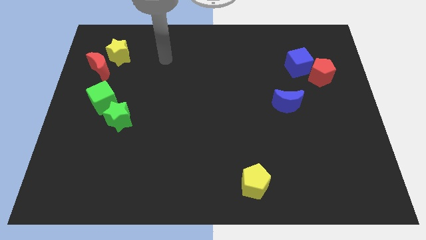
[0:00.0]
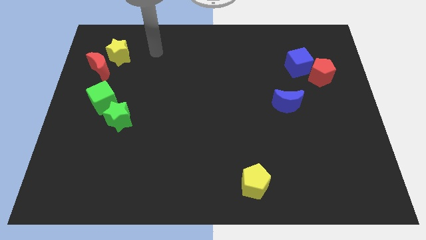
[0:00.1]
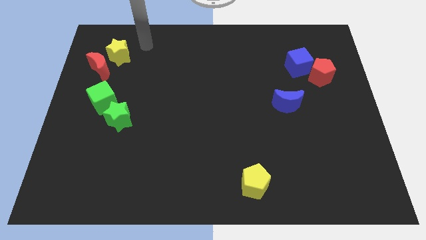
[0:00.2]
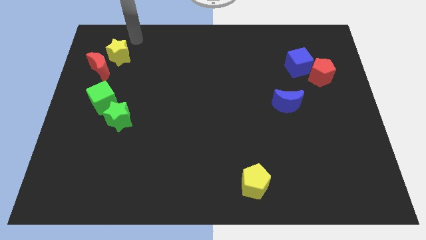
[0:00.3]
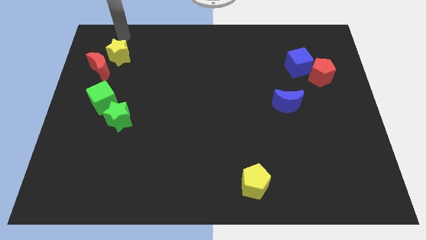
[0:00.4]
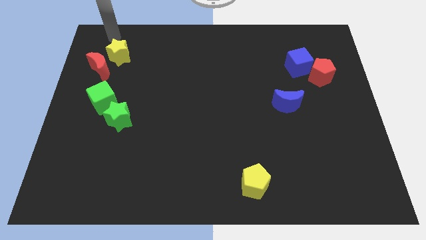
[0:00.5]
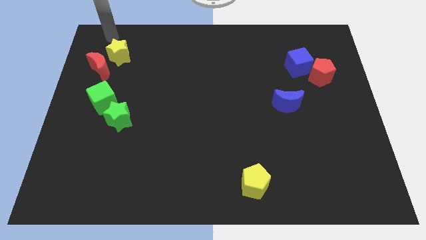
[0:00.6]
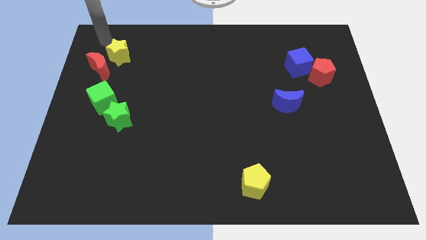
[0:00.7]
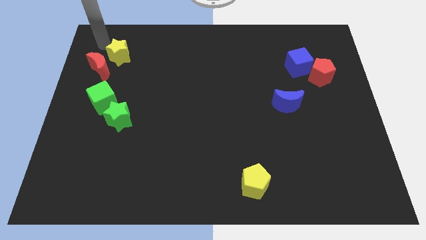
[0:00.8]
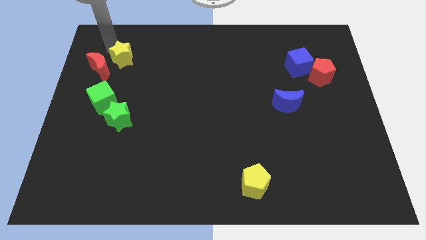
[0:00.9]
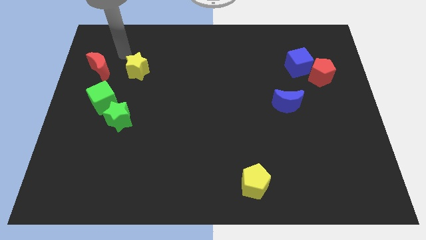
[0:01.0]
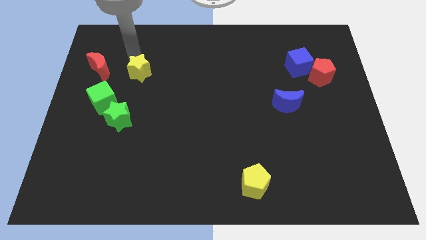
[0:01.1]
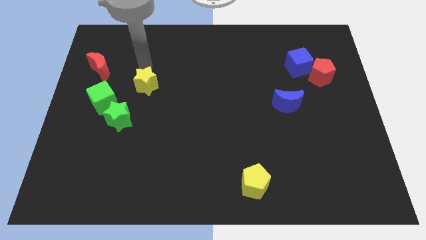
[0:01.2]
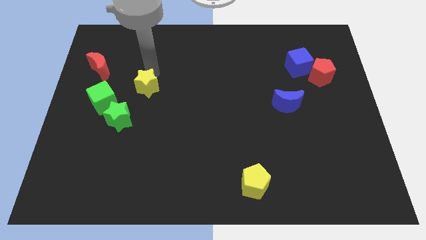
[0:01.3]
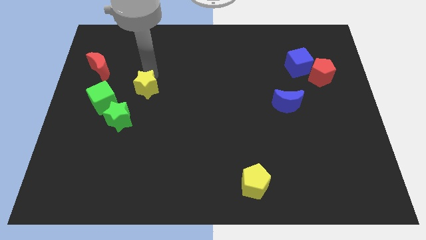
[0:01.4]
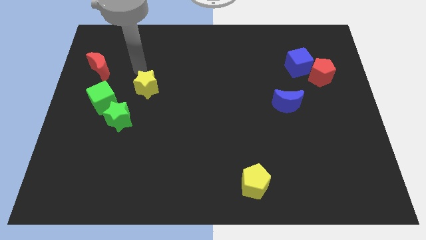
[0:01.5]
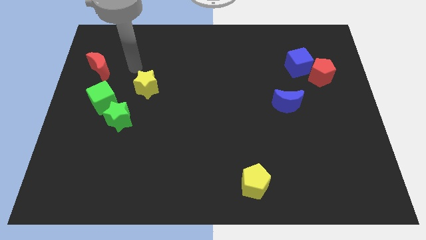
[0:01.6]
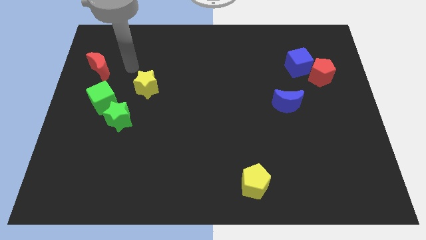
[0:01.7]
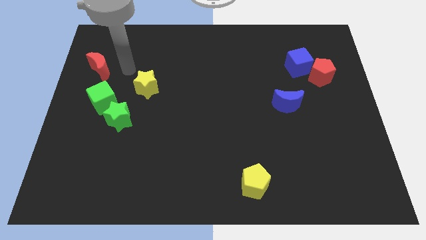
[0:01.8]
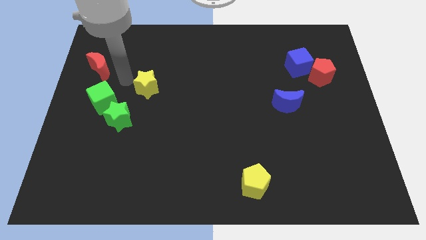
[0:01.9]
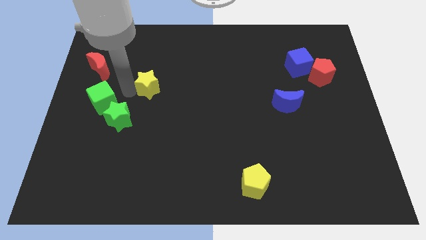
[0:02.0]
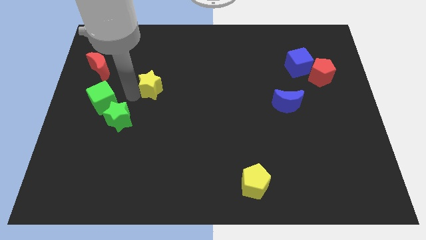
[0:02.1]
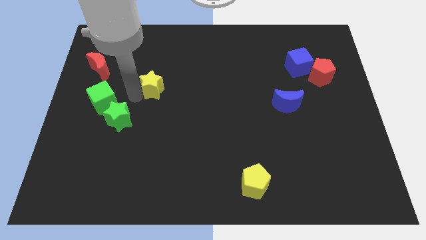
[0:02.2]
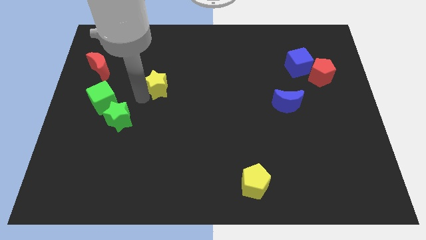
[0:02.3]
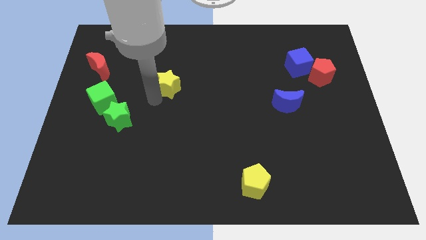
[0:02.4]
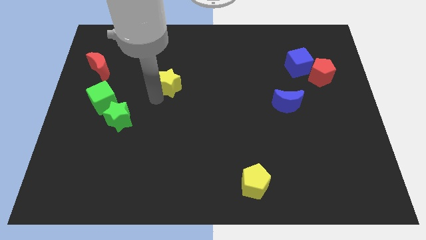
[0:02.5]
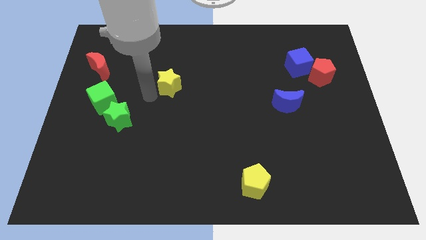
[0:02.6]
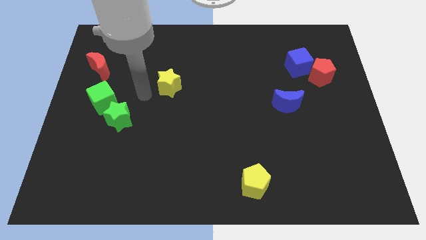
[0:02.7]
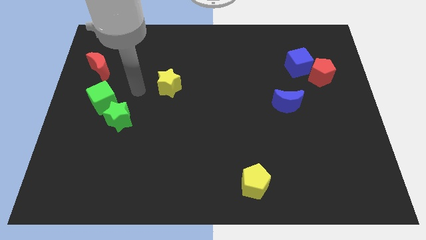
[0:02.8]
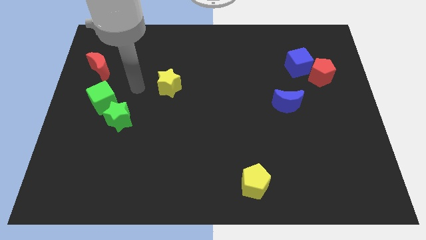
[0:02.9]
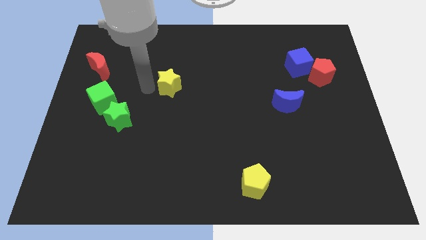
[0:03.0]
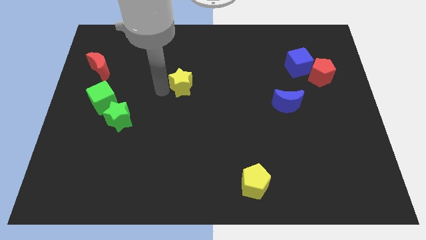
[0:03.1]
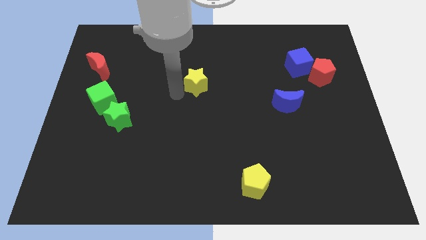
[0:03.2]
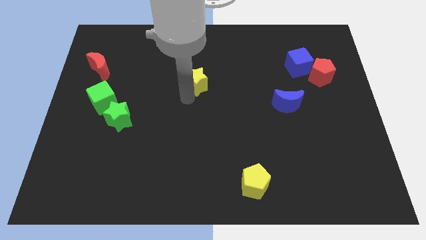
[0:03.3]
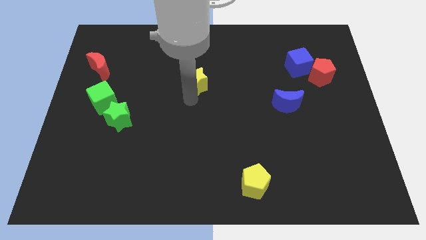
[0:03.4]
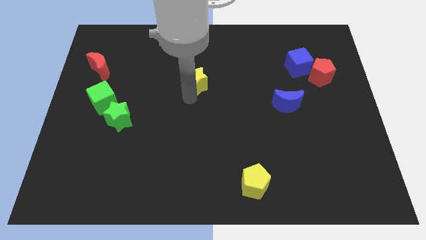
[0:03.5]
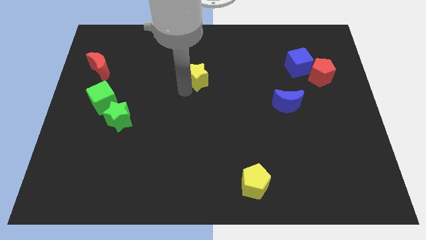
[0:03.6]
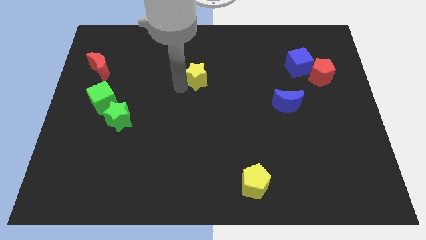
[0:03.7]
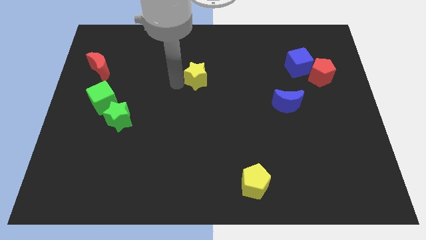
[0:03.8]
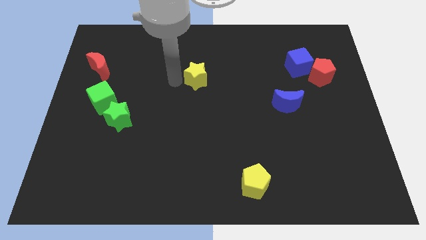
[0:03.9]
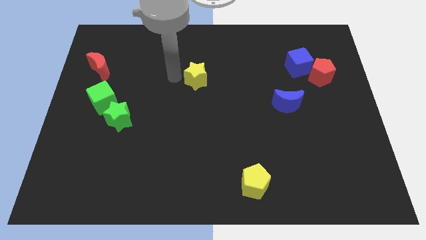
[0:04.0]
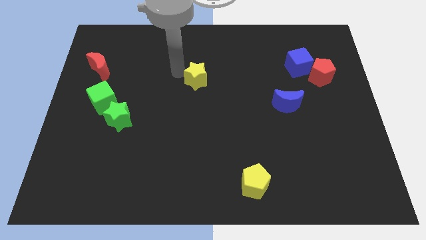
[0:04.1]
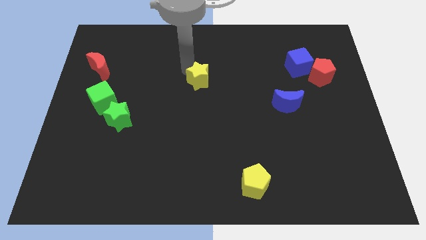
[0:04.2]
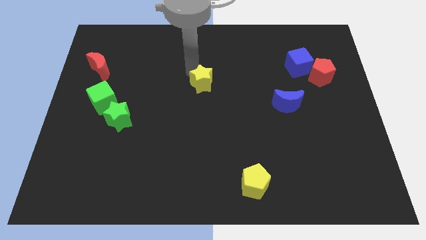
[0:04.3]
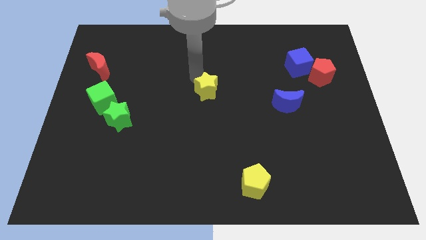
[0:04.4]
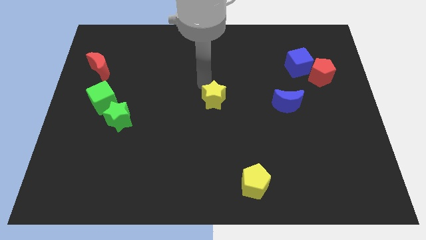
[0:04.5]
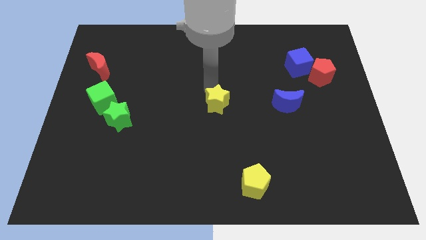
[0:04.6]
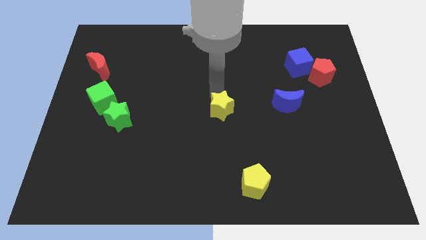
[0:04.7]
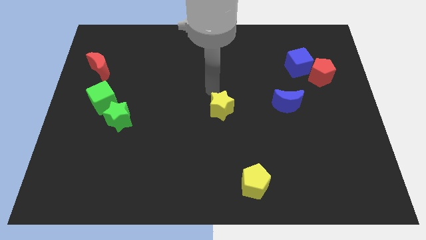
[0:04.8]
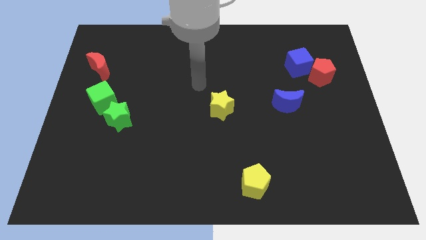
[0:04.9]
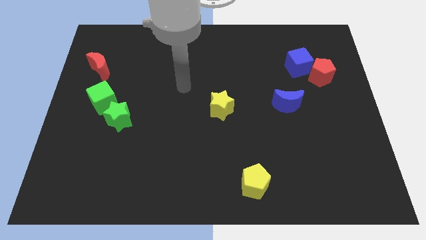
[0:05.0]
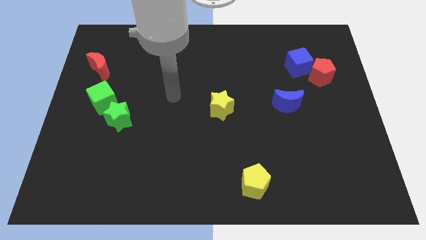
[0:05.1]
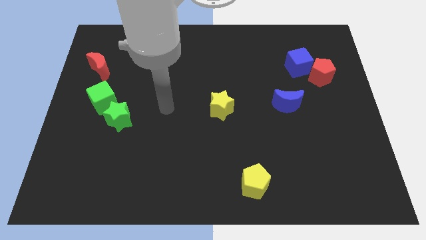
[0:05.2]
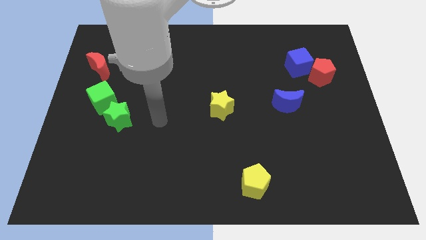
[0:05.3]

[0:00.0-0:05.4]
move the yellow star to the center of the board

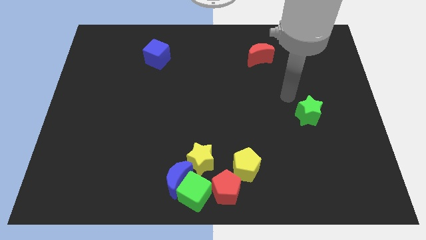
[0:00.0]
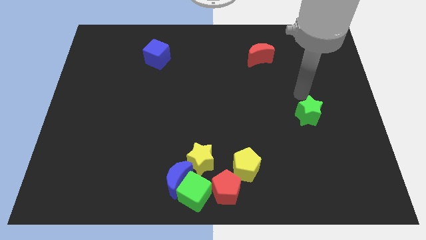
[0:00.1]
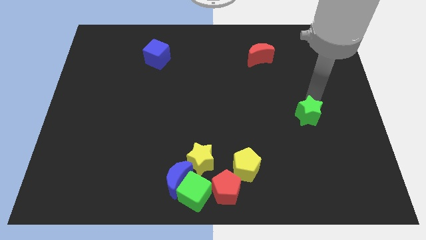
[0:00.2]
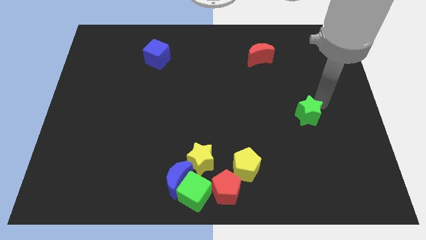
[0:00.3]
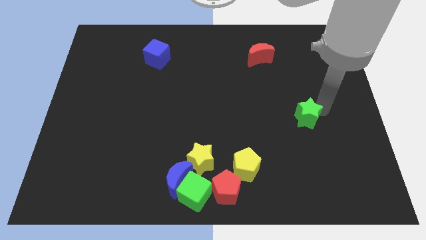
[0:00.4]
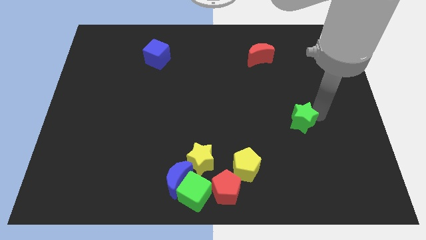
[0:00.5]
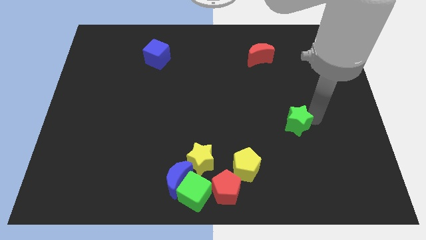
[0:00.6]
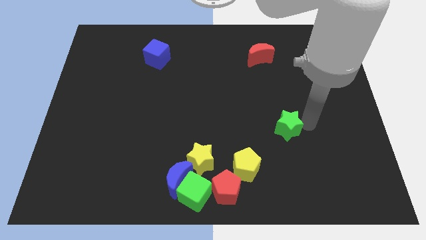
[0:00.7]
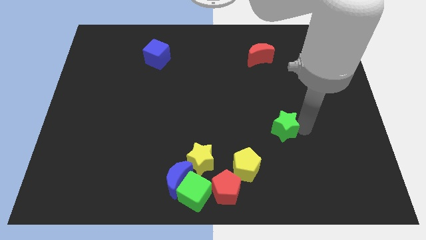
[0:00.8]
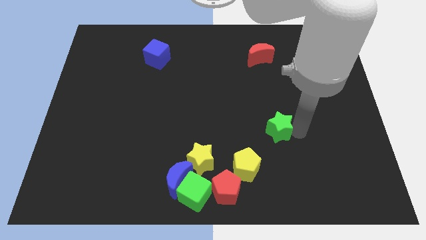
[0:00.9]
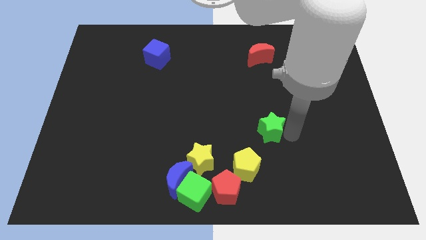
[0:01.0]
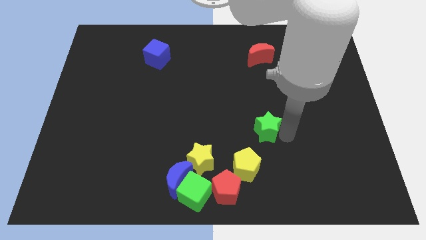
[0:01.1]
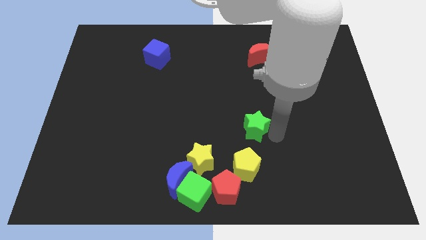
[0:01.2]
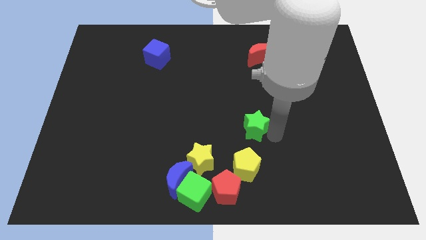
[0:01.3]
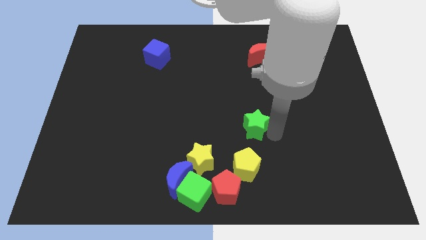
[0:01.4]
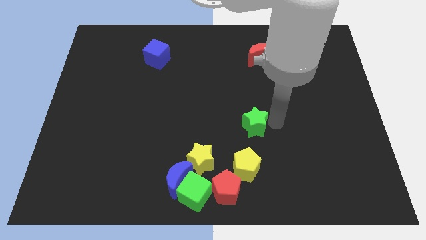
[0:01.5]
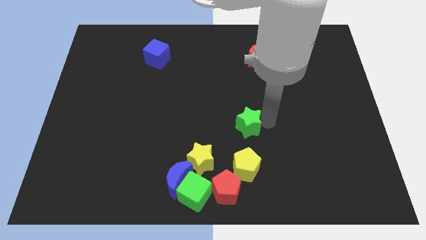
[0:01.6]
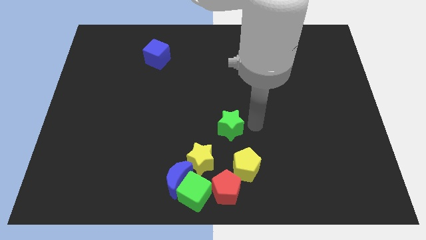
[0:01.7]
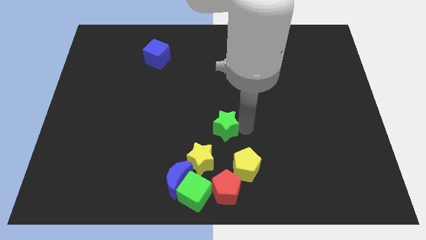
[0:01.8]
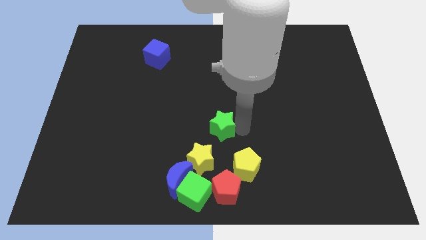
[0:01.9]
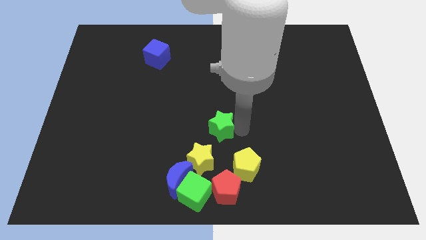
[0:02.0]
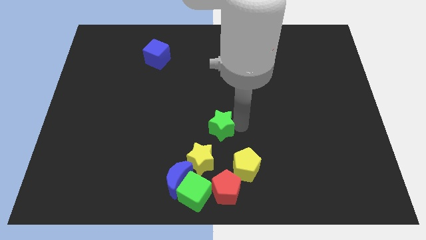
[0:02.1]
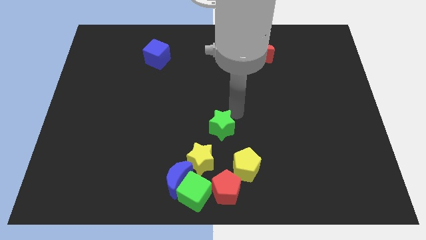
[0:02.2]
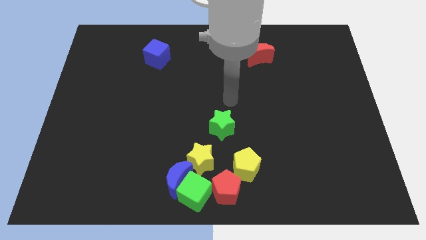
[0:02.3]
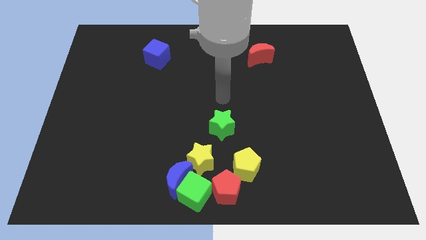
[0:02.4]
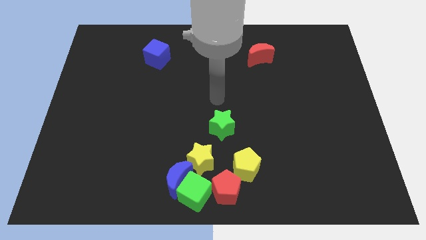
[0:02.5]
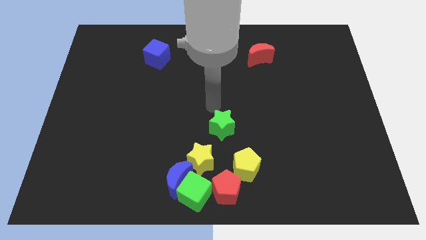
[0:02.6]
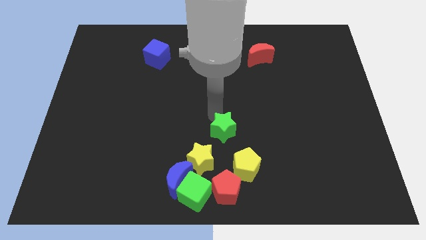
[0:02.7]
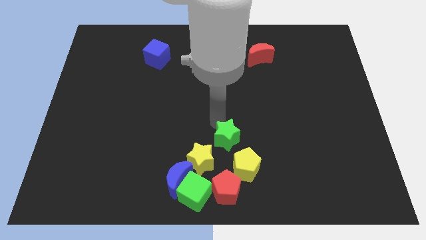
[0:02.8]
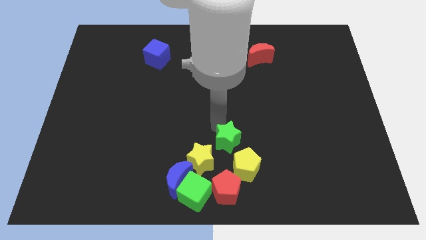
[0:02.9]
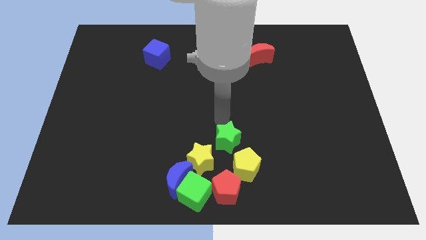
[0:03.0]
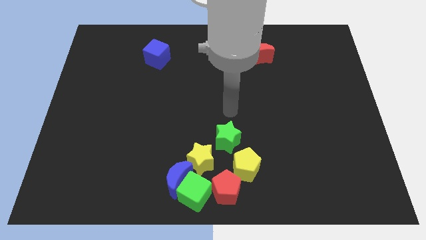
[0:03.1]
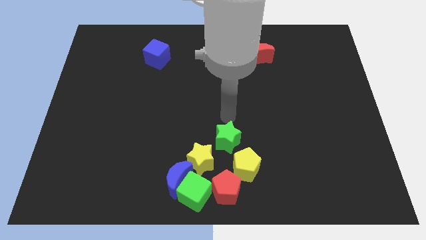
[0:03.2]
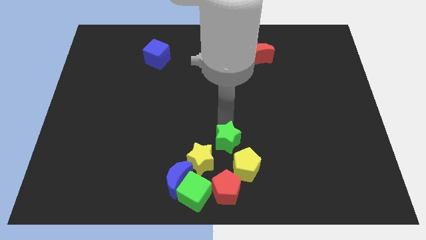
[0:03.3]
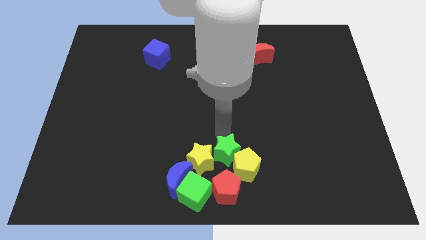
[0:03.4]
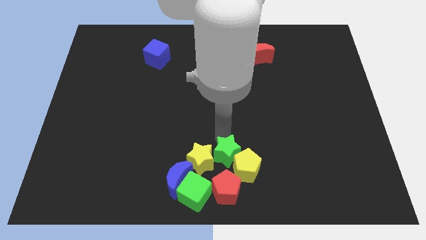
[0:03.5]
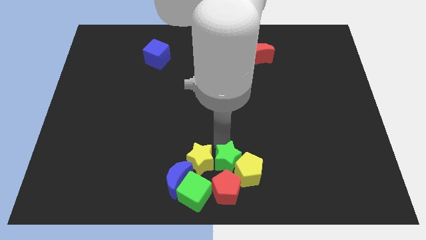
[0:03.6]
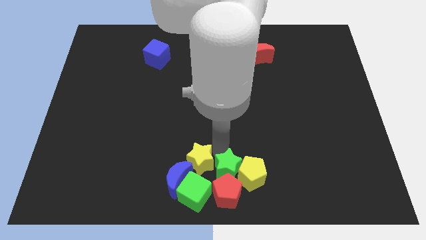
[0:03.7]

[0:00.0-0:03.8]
move the green star into the group of blocks
